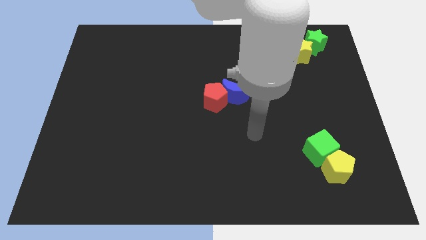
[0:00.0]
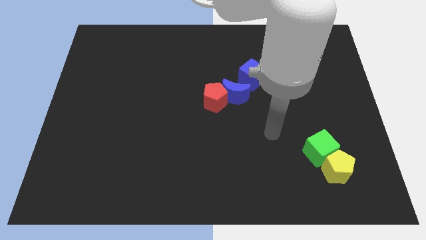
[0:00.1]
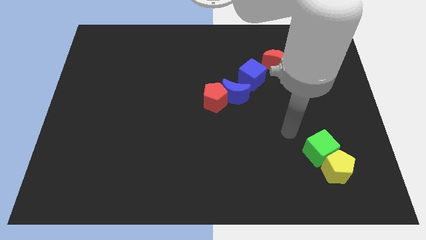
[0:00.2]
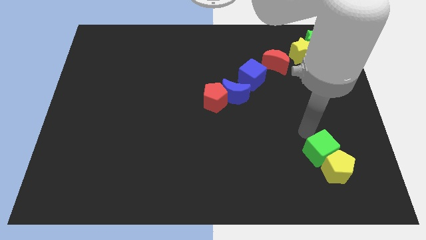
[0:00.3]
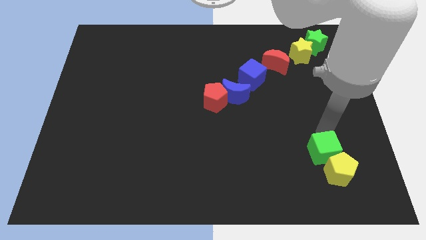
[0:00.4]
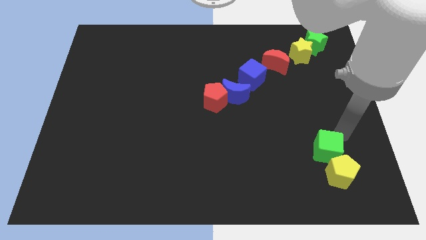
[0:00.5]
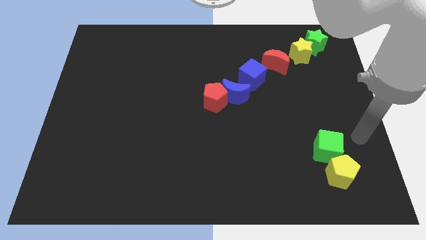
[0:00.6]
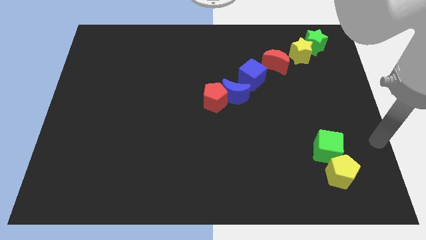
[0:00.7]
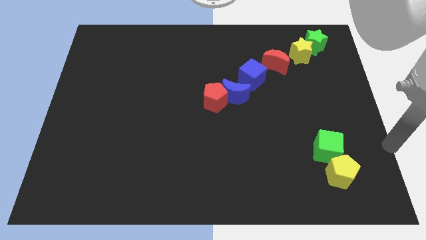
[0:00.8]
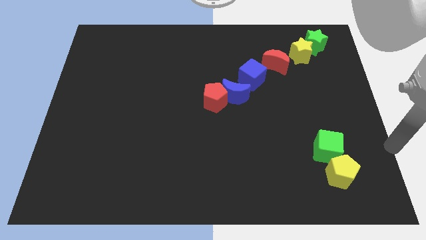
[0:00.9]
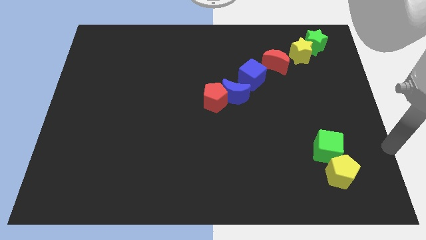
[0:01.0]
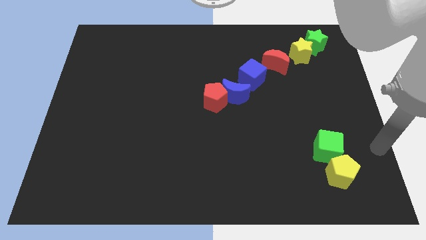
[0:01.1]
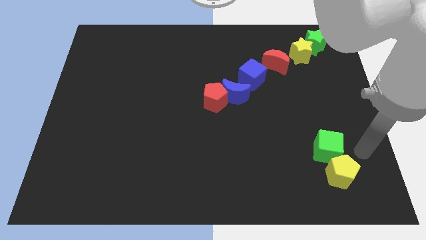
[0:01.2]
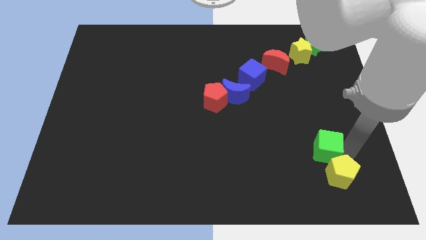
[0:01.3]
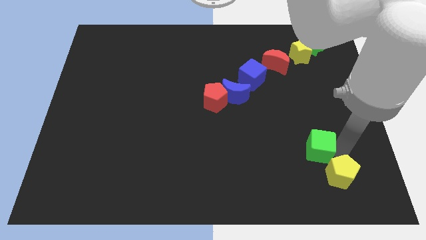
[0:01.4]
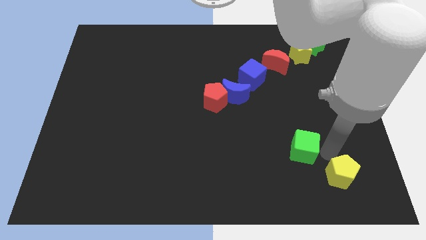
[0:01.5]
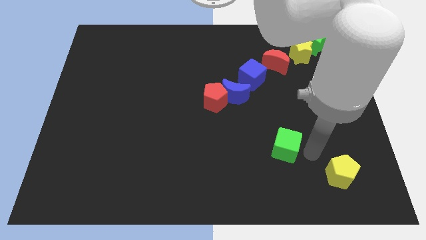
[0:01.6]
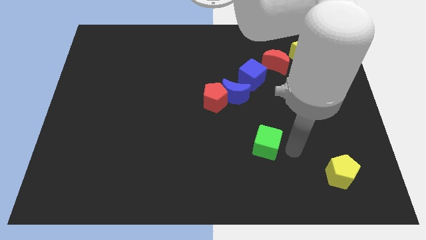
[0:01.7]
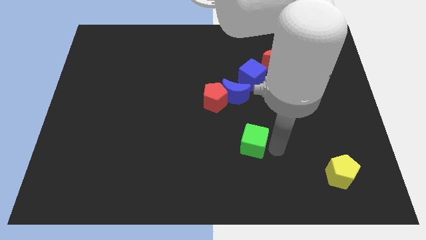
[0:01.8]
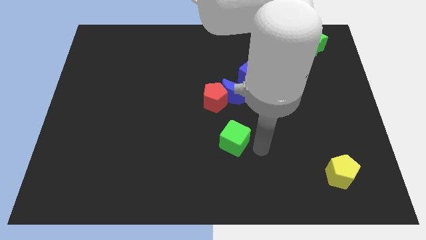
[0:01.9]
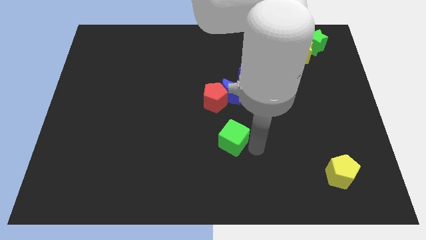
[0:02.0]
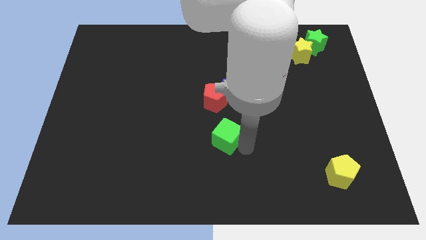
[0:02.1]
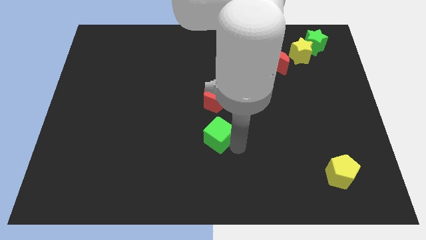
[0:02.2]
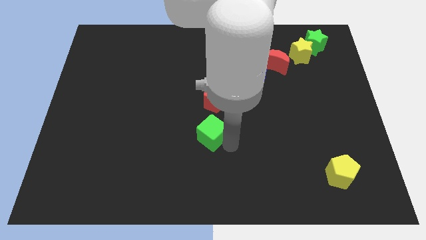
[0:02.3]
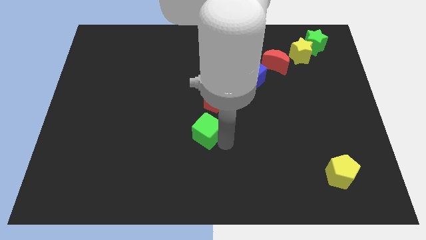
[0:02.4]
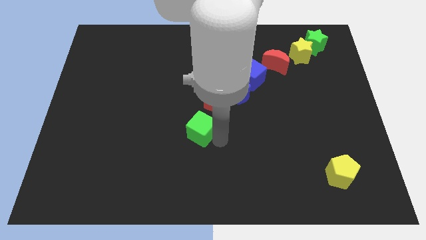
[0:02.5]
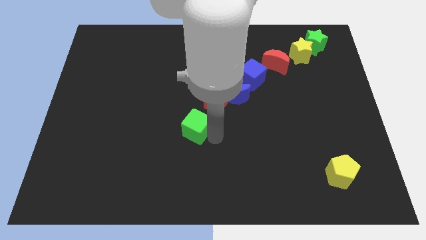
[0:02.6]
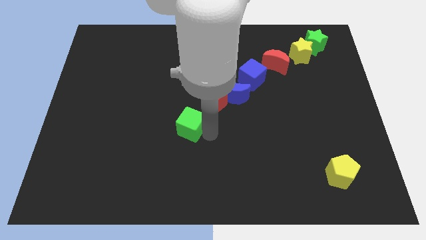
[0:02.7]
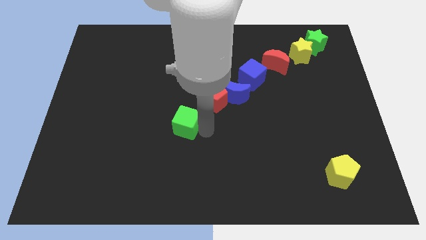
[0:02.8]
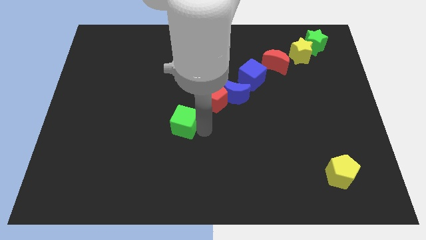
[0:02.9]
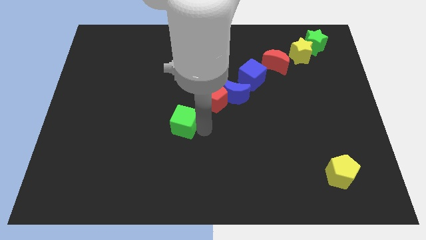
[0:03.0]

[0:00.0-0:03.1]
slide green cube diagonal to red pentagon

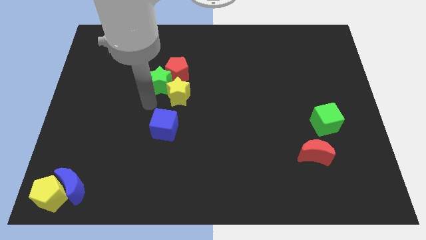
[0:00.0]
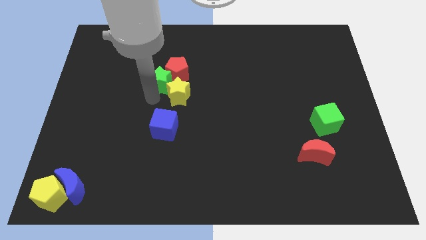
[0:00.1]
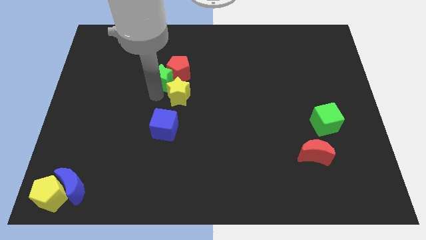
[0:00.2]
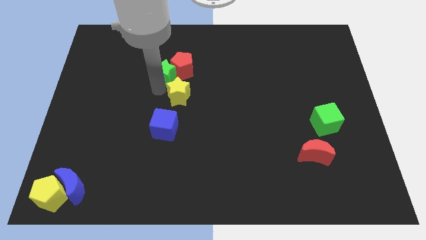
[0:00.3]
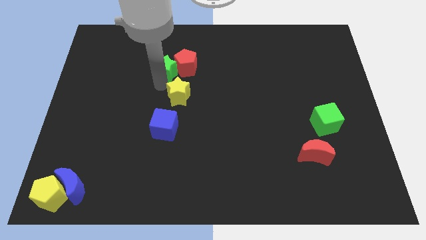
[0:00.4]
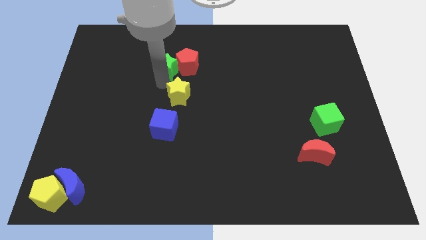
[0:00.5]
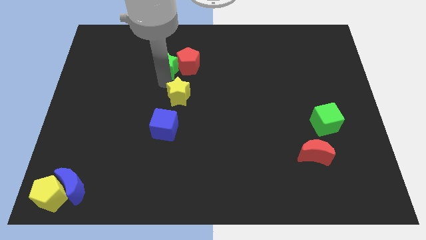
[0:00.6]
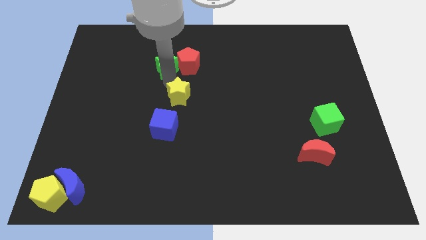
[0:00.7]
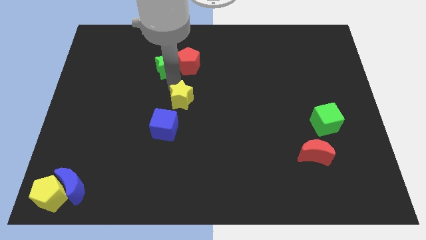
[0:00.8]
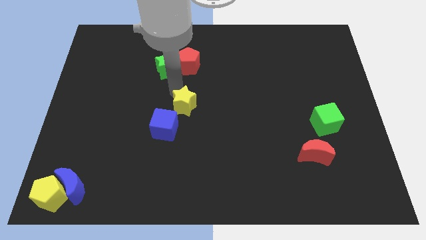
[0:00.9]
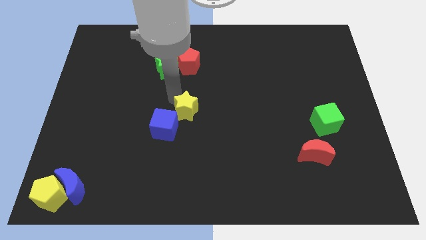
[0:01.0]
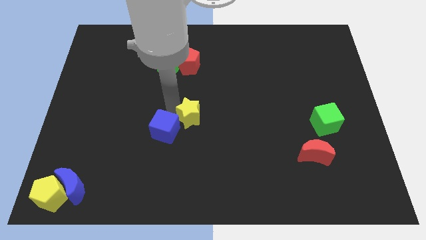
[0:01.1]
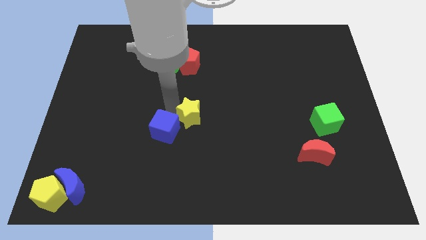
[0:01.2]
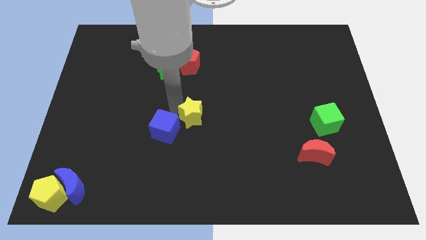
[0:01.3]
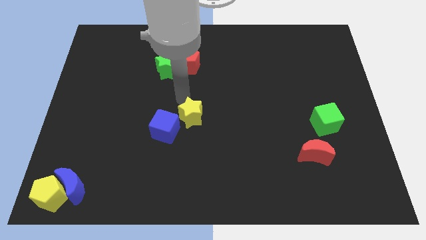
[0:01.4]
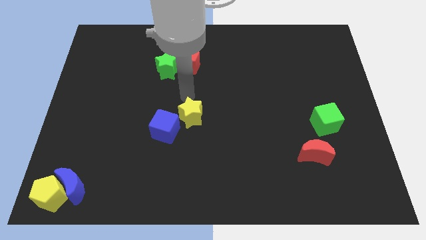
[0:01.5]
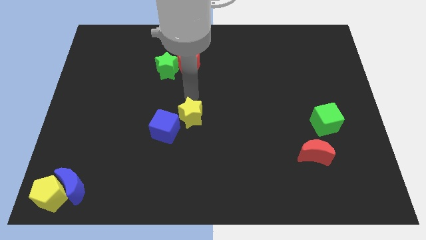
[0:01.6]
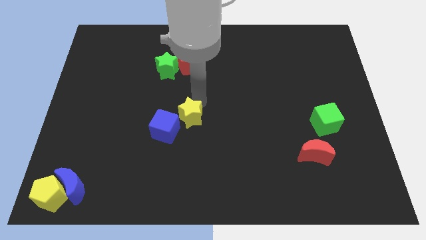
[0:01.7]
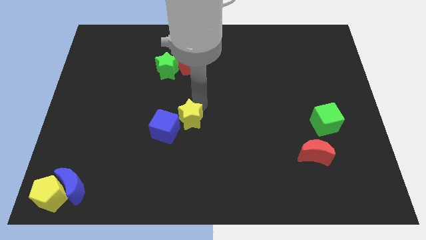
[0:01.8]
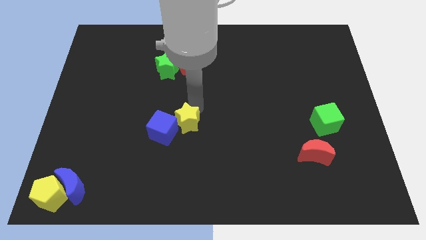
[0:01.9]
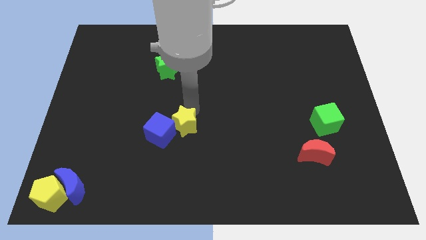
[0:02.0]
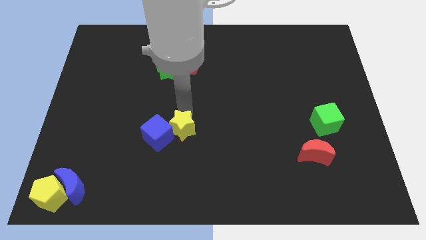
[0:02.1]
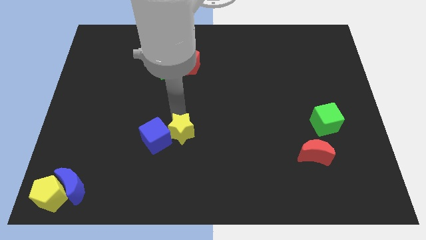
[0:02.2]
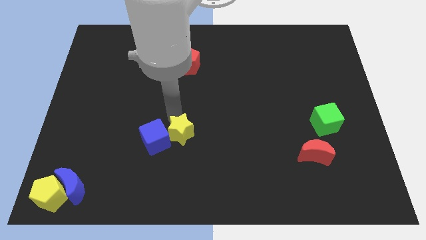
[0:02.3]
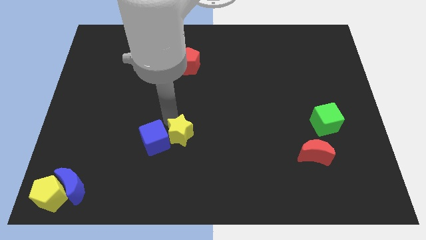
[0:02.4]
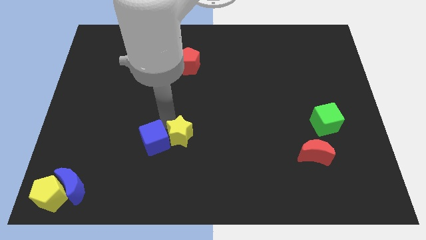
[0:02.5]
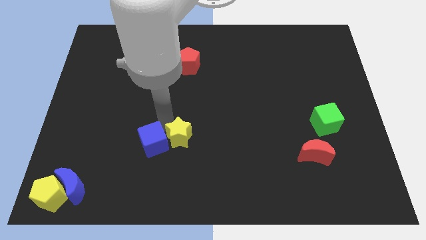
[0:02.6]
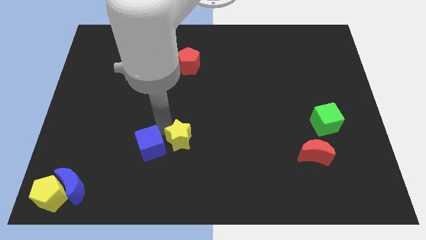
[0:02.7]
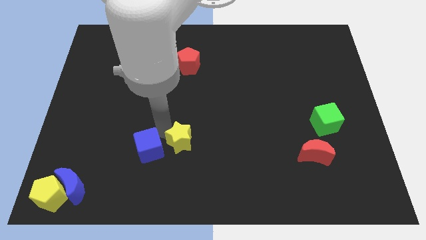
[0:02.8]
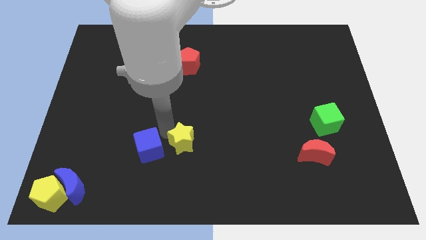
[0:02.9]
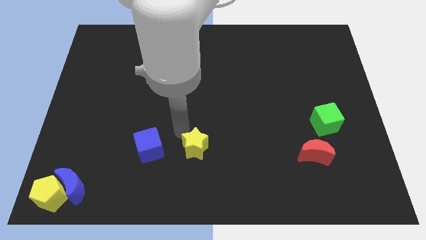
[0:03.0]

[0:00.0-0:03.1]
move yellow star to the right of the blue cube

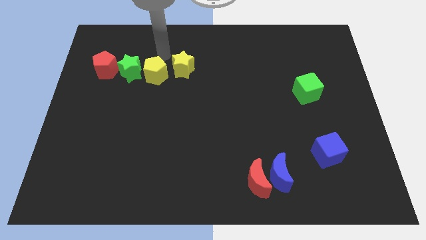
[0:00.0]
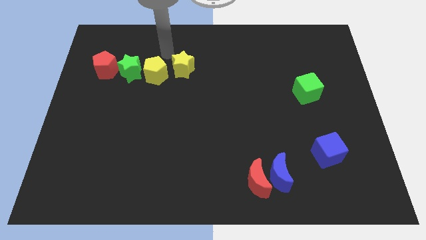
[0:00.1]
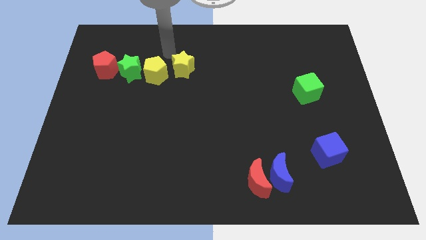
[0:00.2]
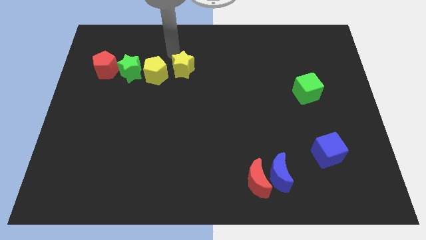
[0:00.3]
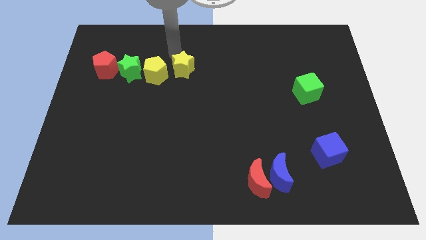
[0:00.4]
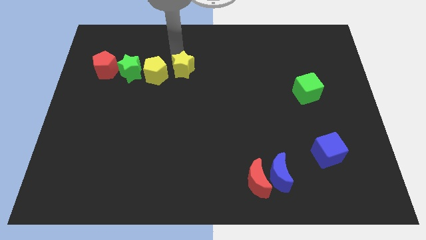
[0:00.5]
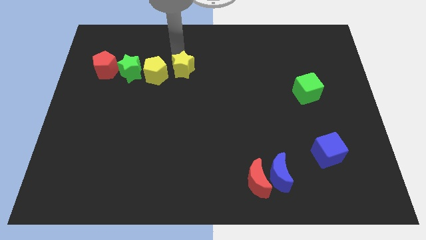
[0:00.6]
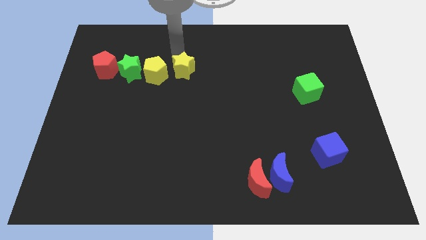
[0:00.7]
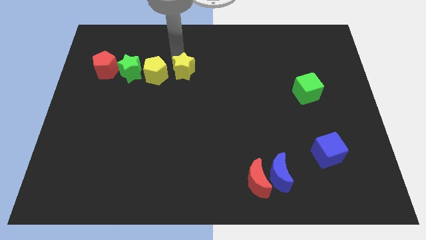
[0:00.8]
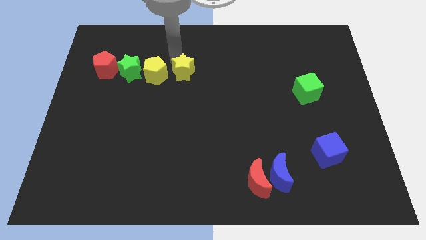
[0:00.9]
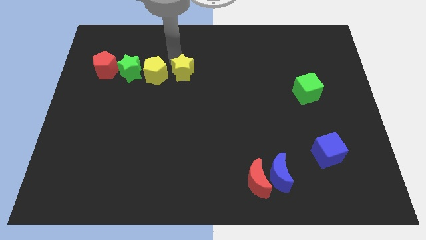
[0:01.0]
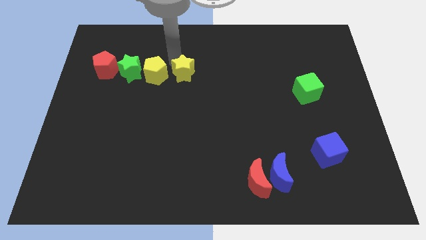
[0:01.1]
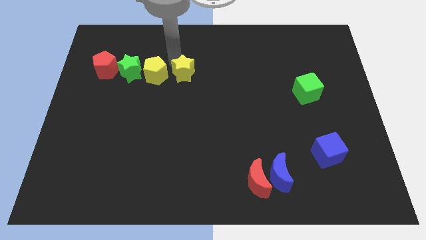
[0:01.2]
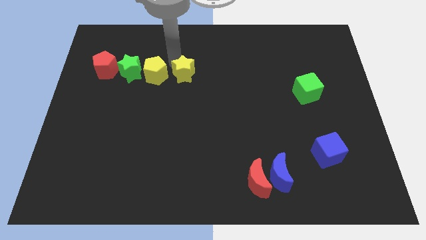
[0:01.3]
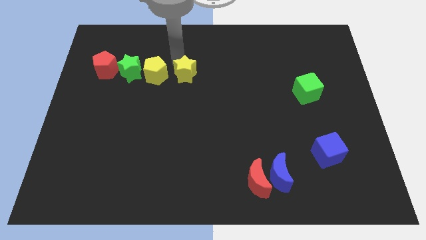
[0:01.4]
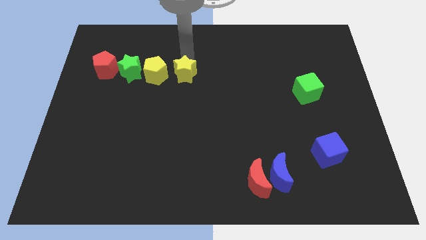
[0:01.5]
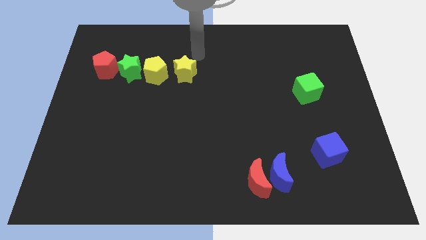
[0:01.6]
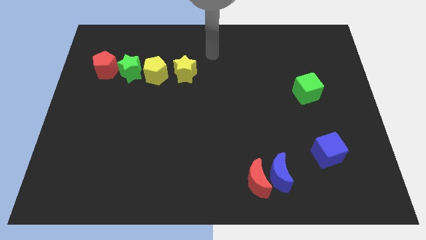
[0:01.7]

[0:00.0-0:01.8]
slide the yellow star slightly towards down

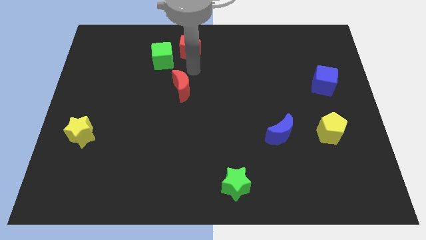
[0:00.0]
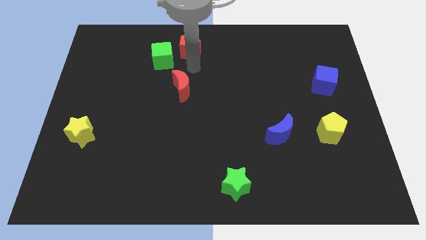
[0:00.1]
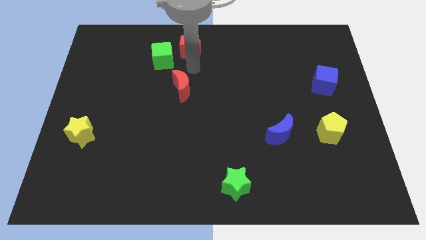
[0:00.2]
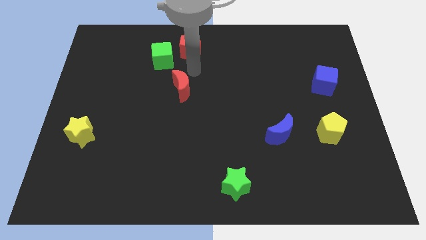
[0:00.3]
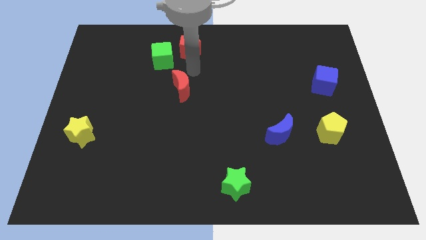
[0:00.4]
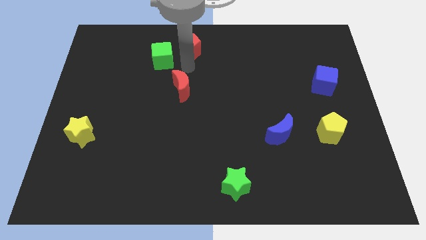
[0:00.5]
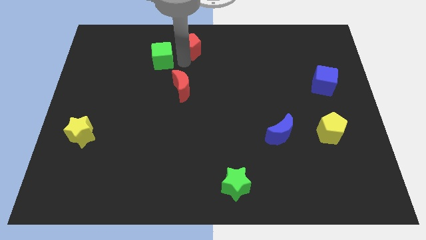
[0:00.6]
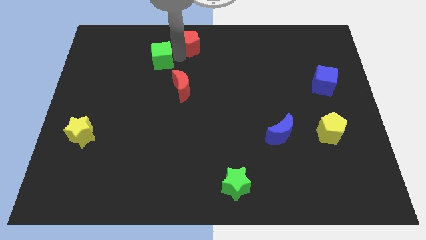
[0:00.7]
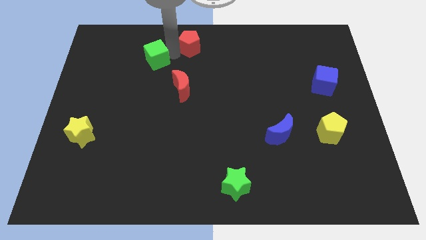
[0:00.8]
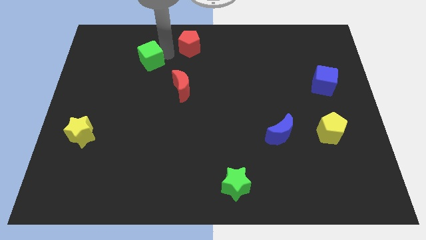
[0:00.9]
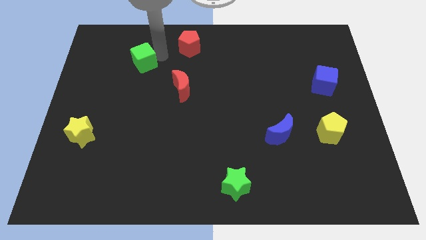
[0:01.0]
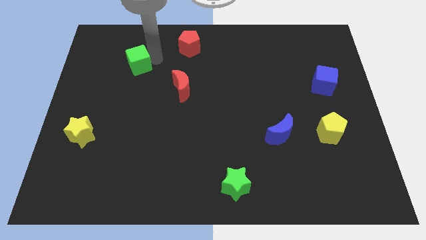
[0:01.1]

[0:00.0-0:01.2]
push the green cube slightly to the left of the board
